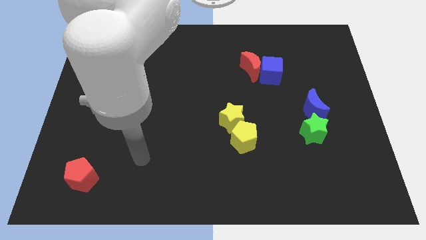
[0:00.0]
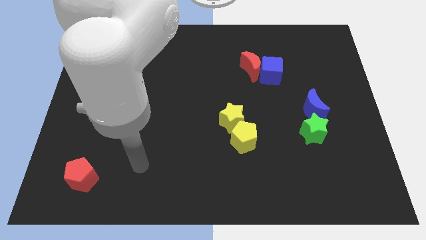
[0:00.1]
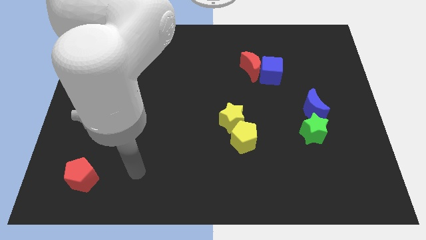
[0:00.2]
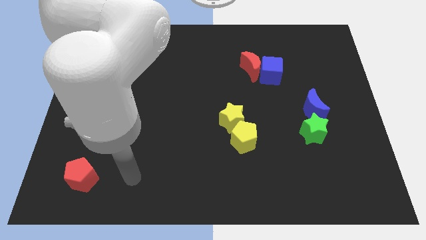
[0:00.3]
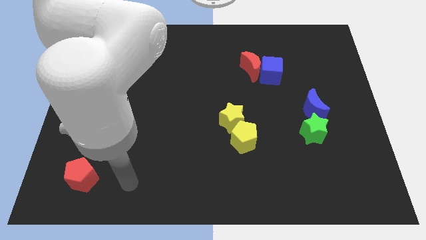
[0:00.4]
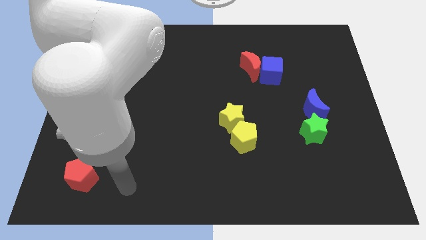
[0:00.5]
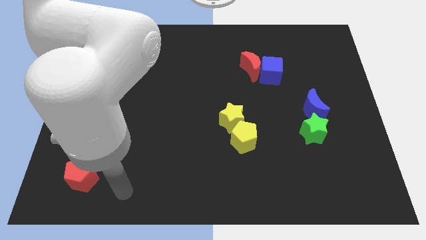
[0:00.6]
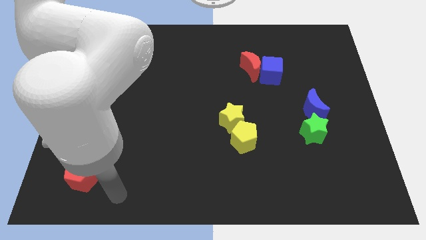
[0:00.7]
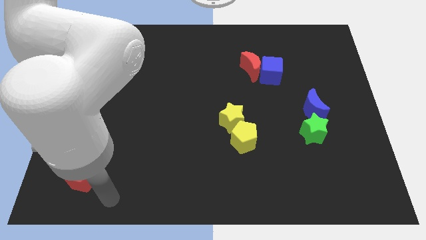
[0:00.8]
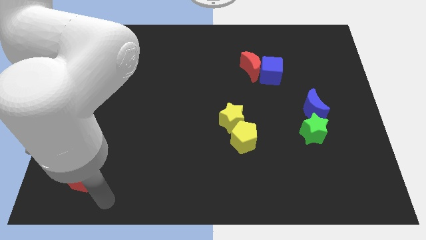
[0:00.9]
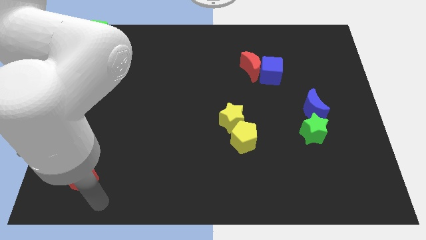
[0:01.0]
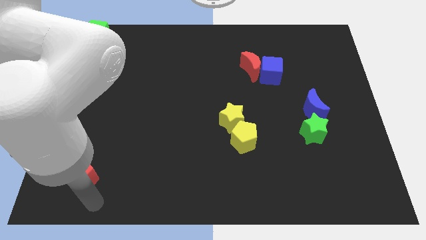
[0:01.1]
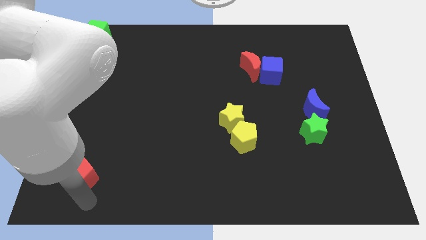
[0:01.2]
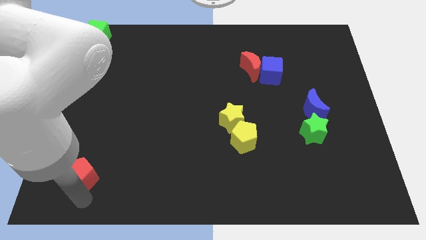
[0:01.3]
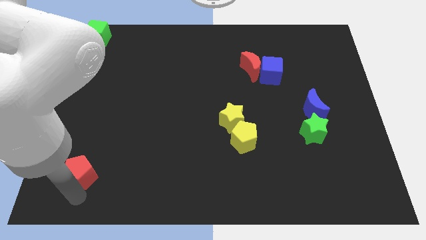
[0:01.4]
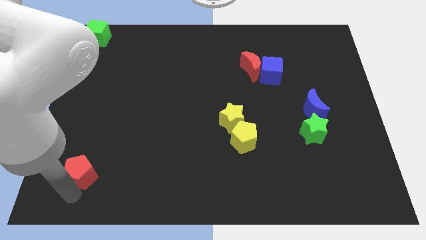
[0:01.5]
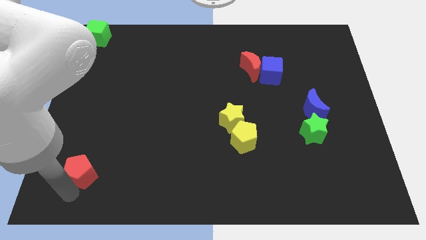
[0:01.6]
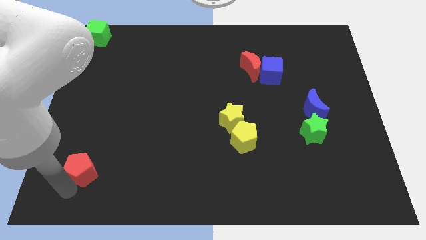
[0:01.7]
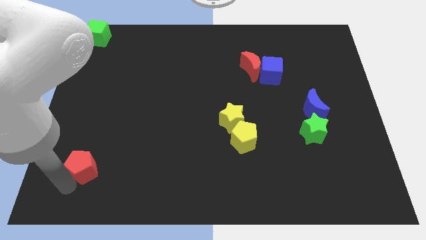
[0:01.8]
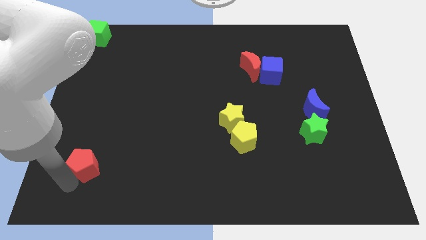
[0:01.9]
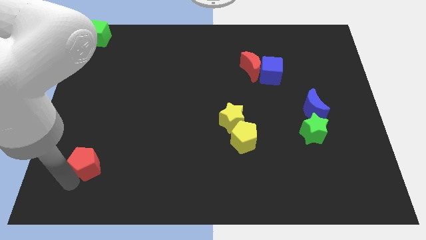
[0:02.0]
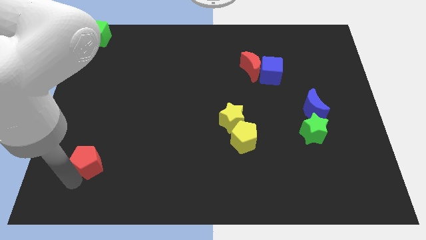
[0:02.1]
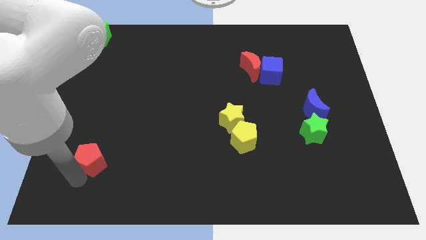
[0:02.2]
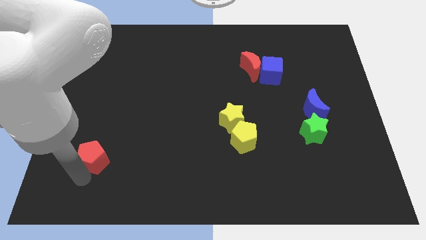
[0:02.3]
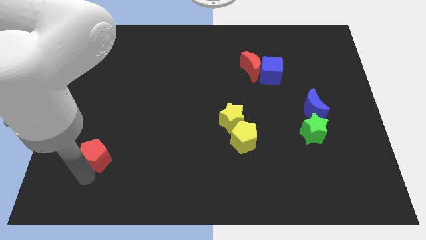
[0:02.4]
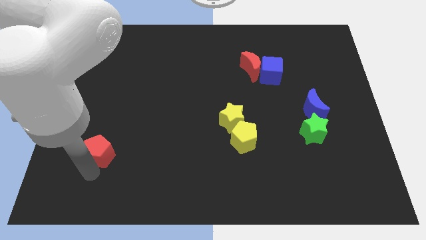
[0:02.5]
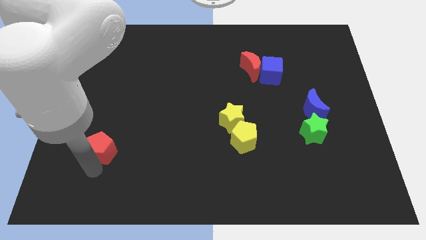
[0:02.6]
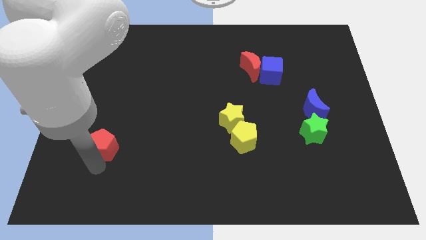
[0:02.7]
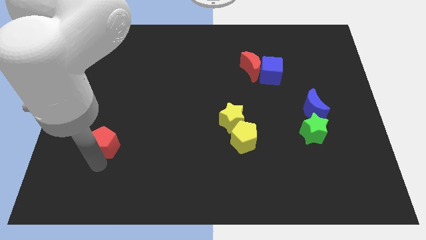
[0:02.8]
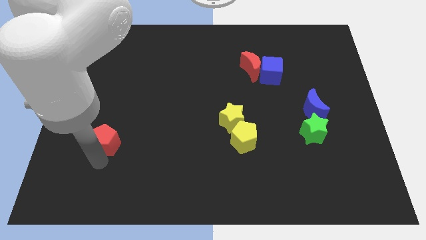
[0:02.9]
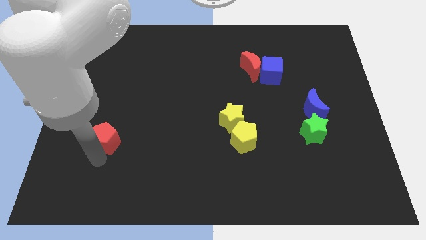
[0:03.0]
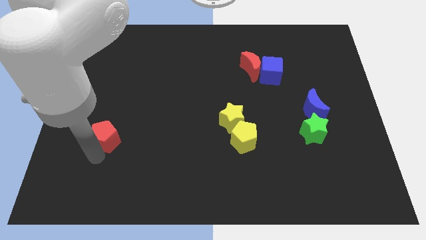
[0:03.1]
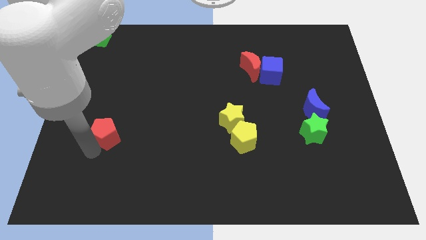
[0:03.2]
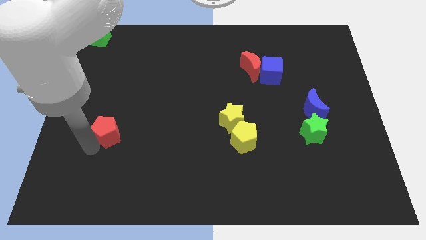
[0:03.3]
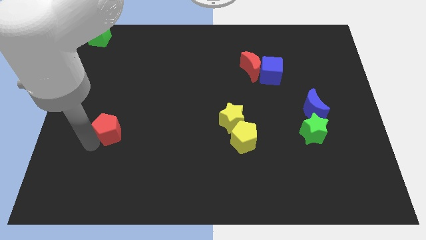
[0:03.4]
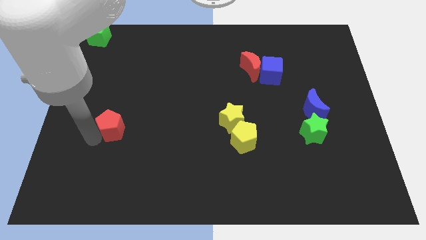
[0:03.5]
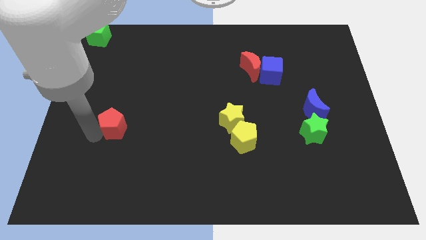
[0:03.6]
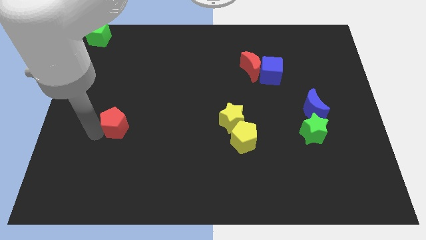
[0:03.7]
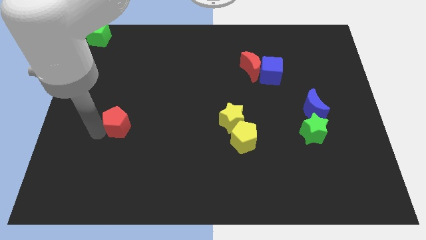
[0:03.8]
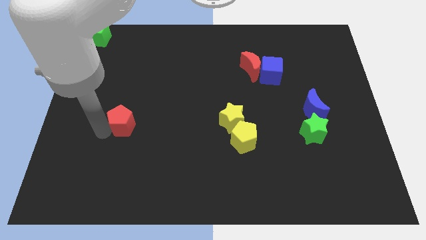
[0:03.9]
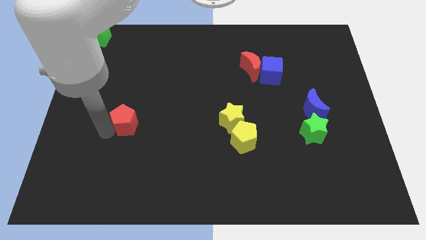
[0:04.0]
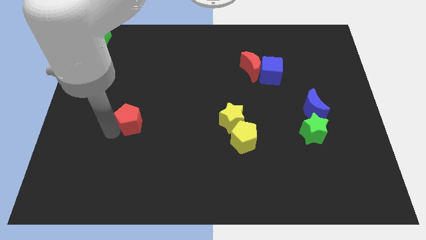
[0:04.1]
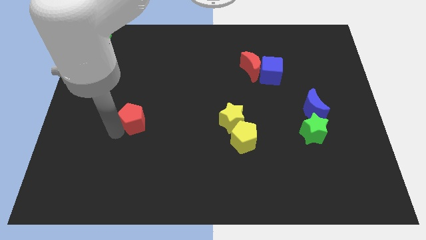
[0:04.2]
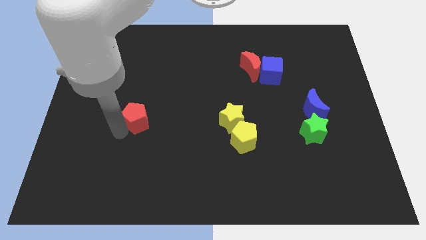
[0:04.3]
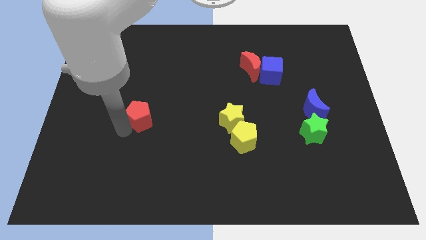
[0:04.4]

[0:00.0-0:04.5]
place the red pentagon parallel to the left side of the yellow star

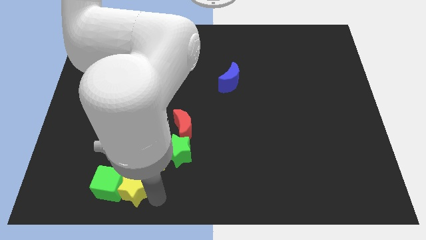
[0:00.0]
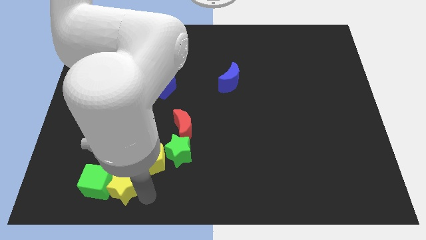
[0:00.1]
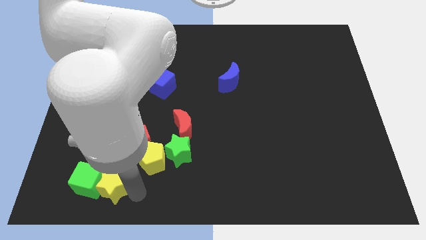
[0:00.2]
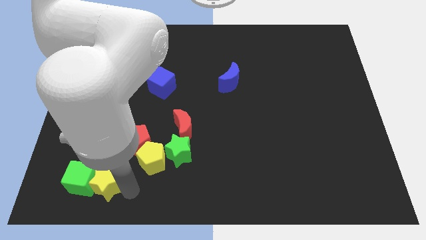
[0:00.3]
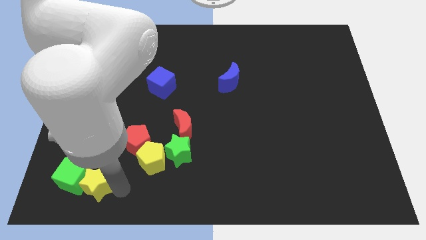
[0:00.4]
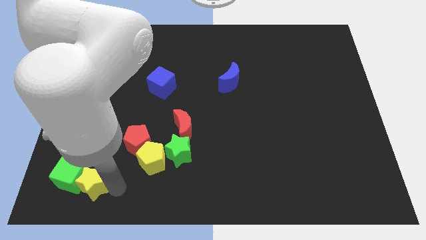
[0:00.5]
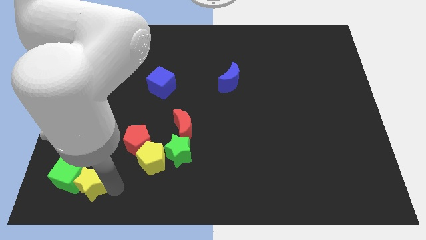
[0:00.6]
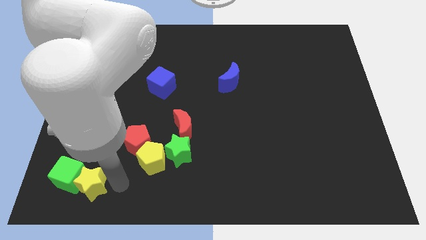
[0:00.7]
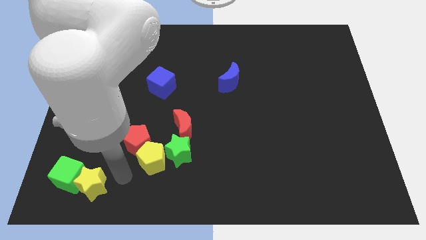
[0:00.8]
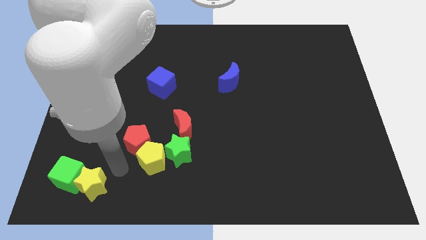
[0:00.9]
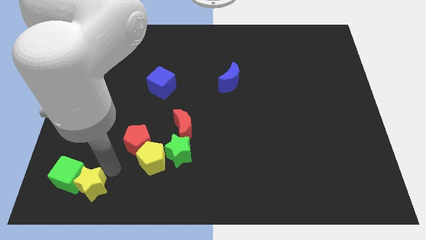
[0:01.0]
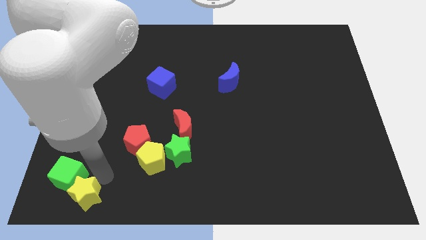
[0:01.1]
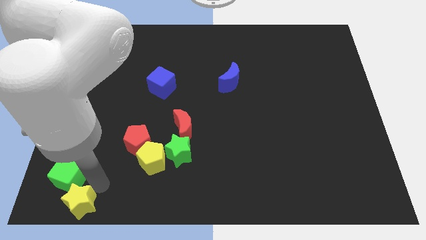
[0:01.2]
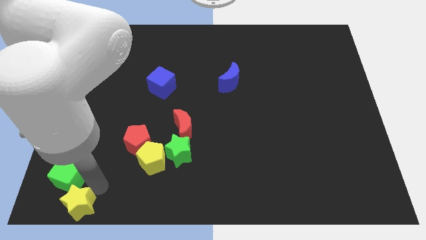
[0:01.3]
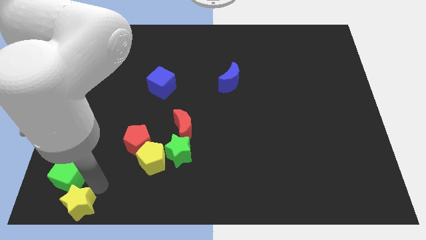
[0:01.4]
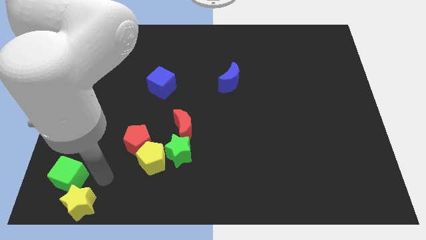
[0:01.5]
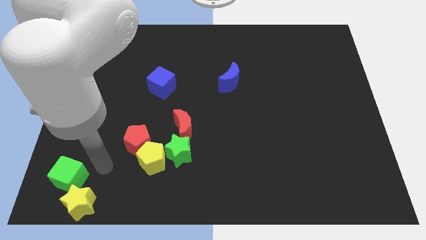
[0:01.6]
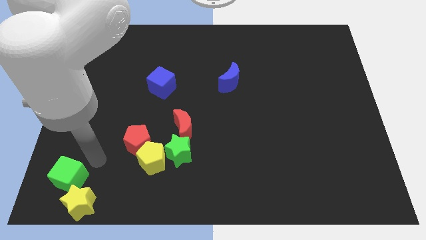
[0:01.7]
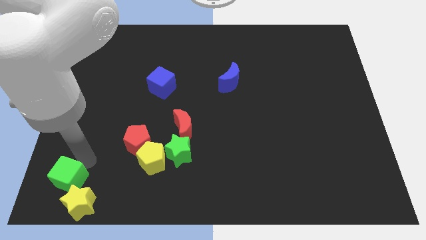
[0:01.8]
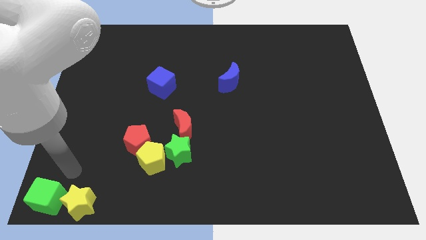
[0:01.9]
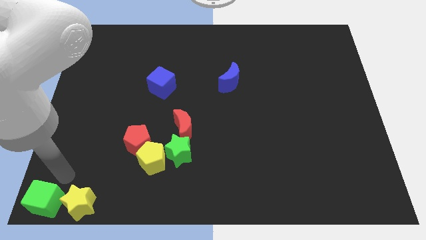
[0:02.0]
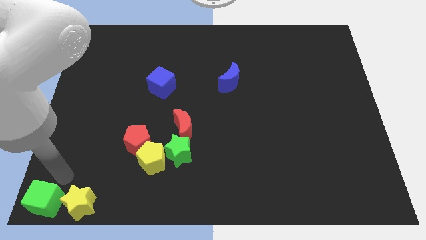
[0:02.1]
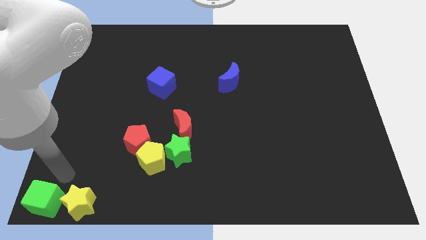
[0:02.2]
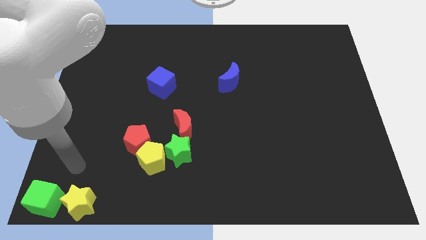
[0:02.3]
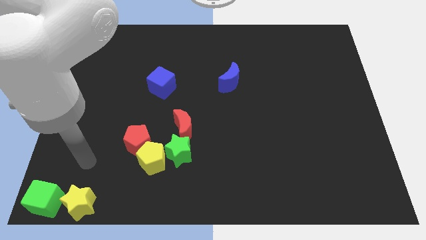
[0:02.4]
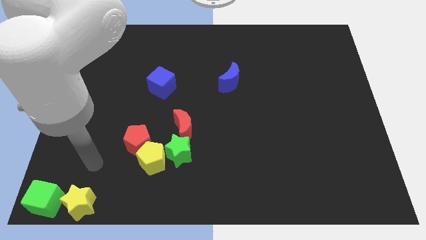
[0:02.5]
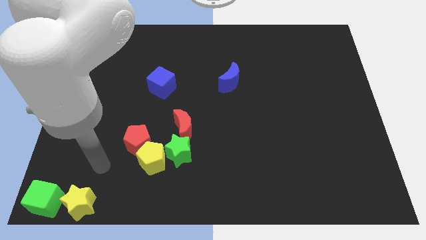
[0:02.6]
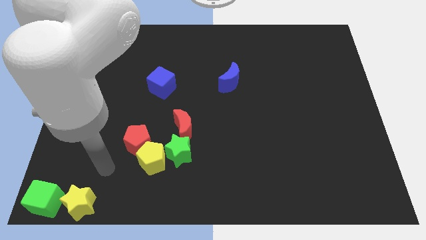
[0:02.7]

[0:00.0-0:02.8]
adjust the yellow star and green cube to the bottom left corner

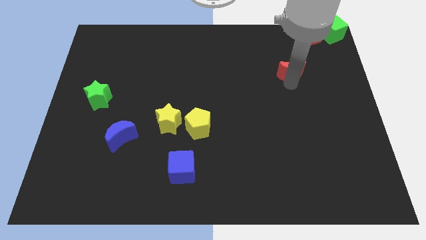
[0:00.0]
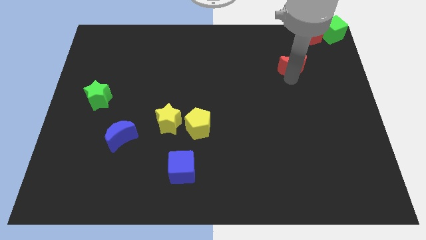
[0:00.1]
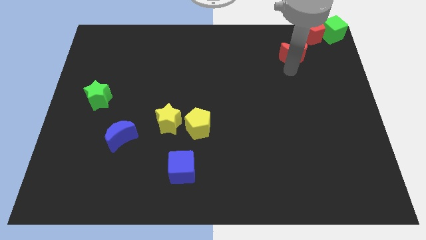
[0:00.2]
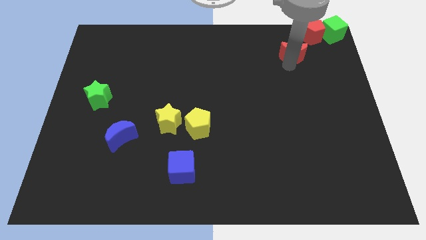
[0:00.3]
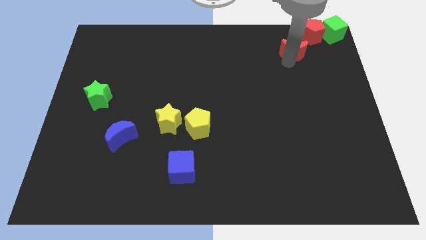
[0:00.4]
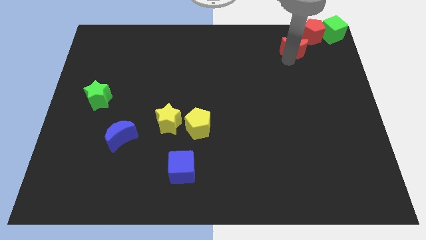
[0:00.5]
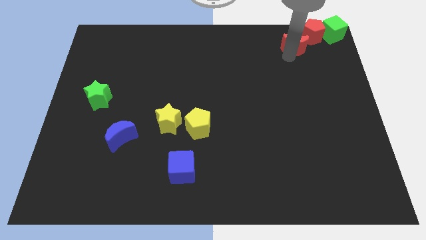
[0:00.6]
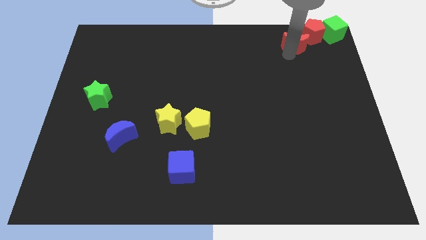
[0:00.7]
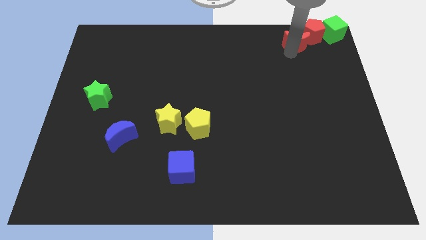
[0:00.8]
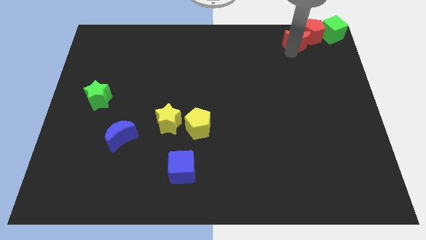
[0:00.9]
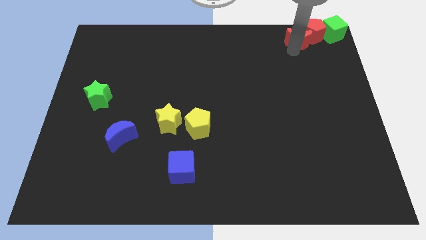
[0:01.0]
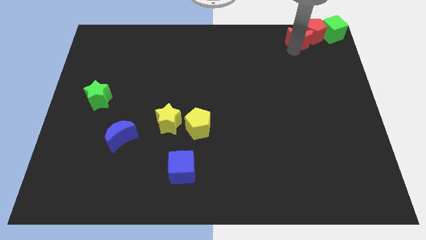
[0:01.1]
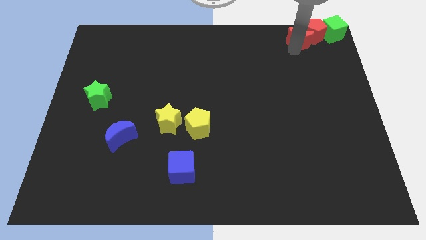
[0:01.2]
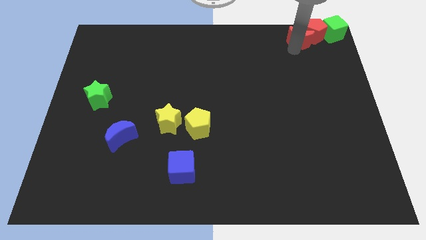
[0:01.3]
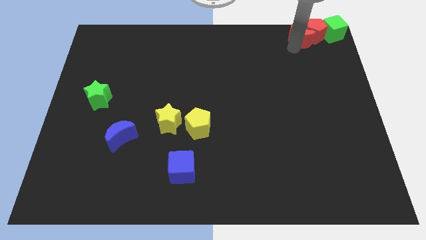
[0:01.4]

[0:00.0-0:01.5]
push the red moon into the red pentagon

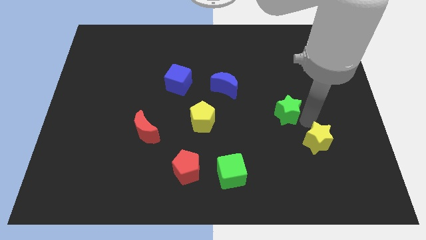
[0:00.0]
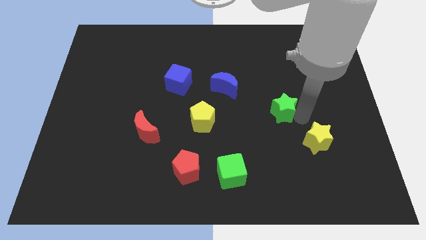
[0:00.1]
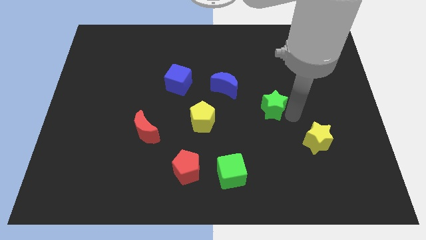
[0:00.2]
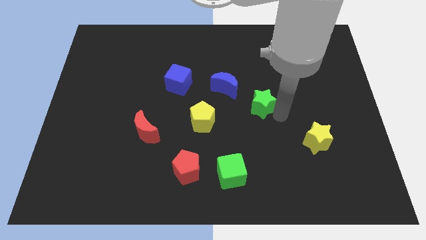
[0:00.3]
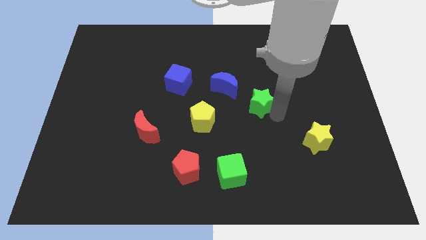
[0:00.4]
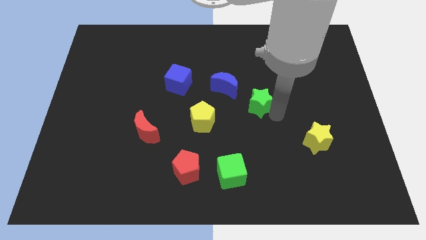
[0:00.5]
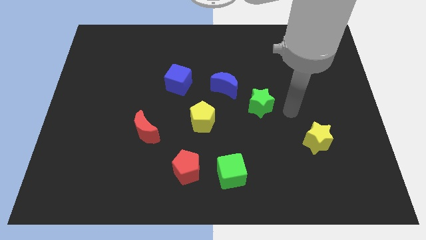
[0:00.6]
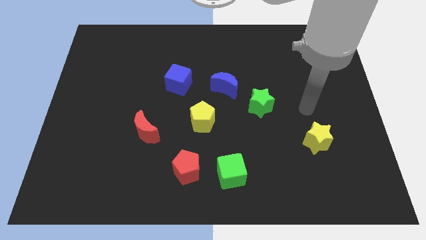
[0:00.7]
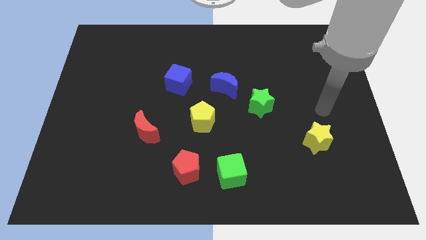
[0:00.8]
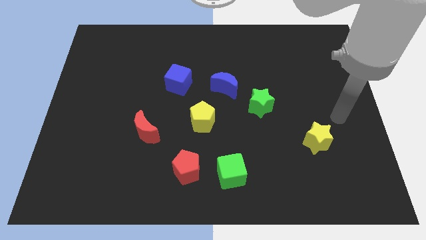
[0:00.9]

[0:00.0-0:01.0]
drag green star bottom right of the blue moon
